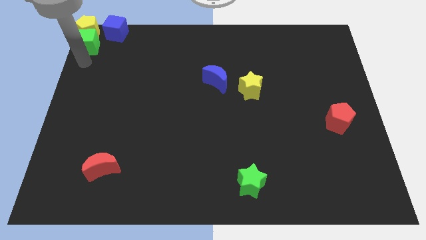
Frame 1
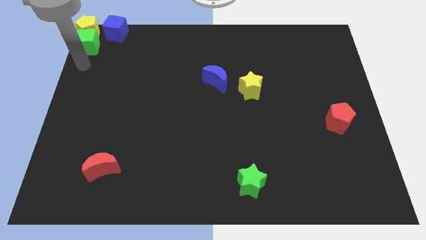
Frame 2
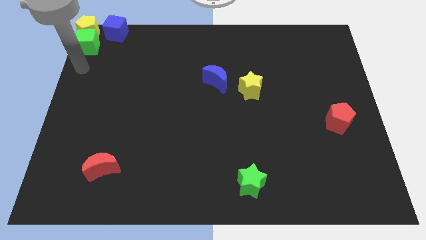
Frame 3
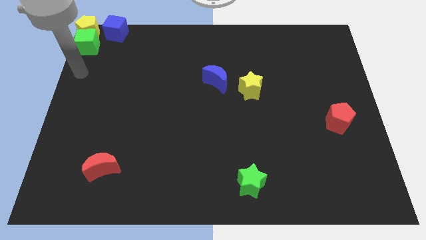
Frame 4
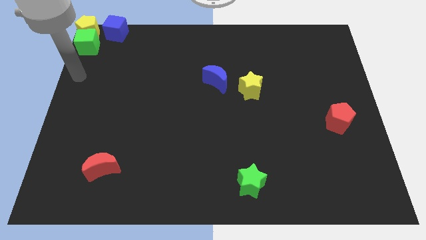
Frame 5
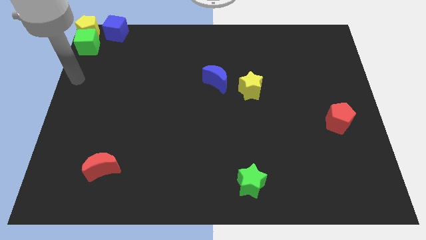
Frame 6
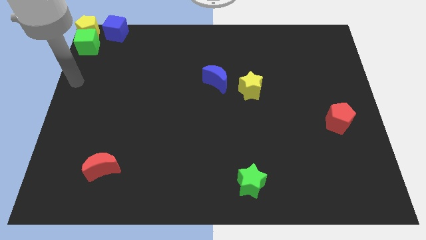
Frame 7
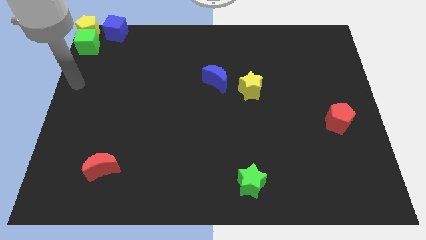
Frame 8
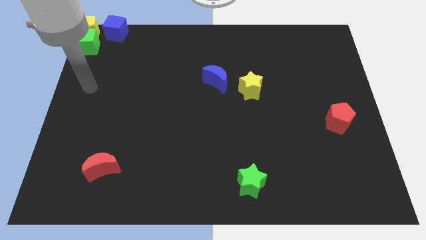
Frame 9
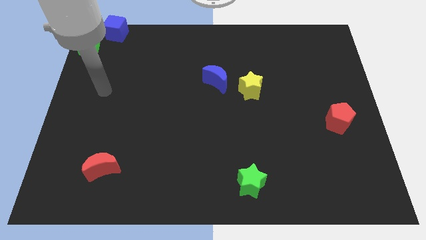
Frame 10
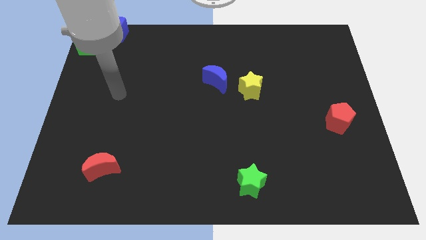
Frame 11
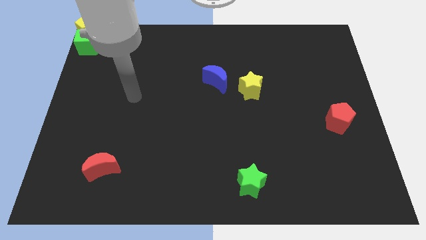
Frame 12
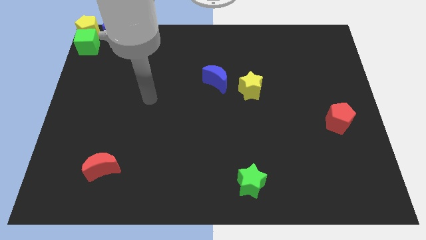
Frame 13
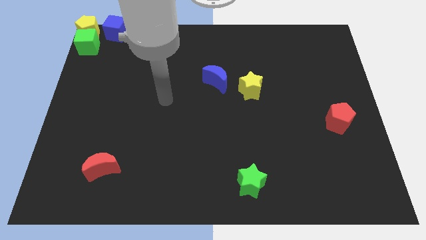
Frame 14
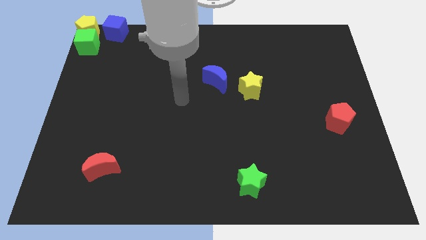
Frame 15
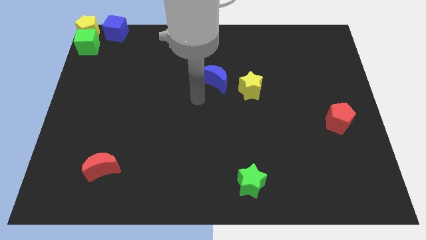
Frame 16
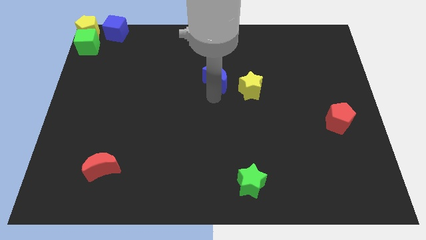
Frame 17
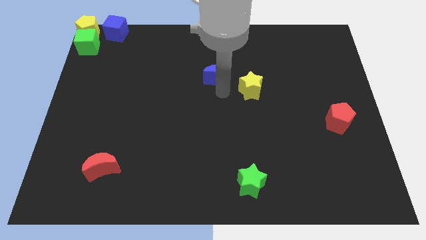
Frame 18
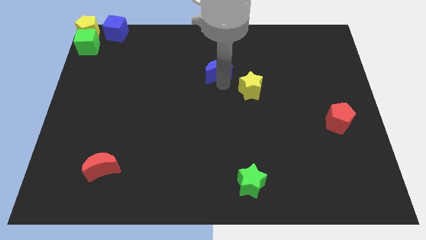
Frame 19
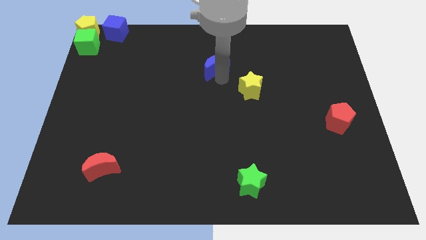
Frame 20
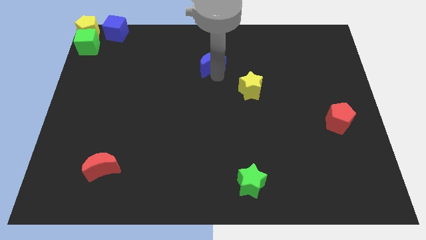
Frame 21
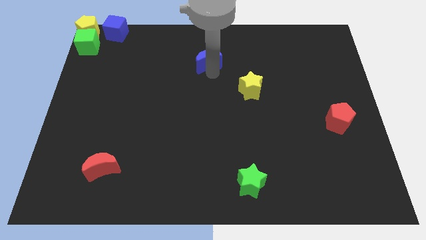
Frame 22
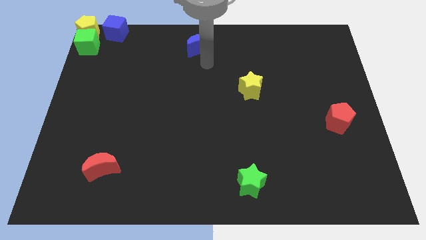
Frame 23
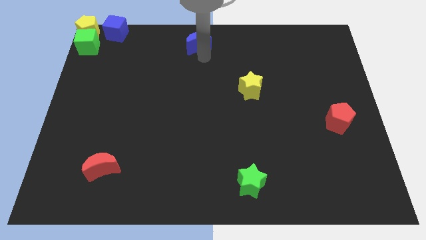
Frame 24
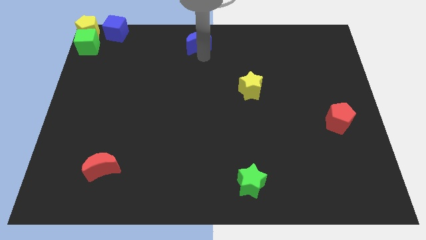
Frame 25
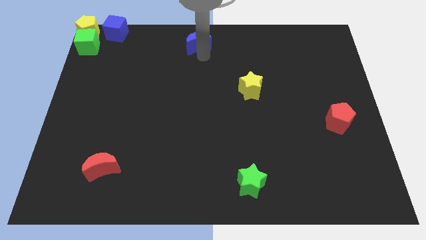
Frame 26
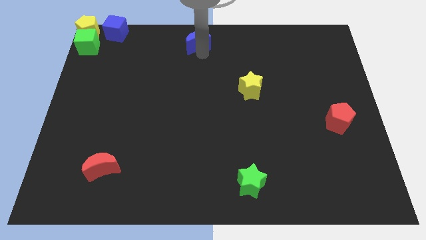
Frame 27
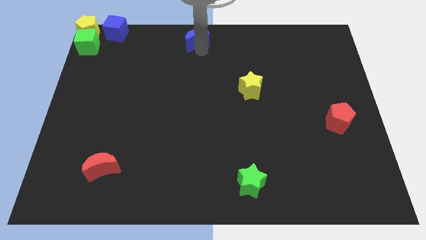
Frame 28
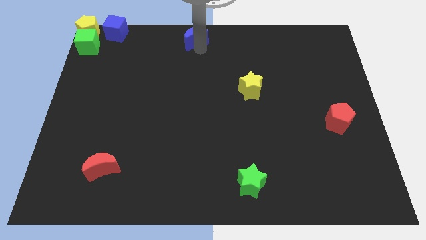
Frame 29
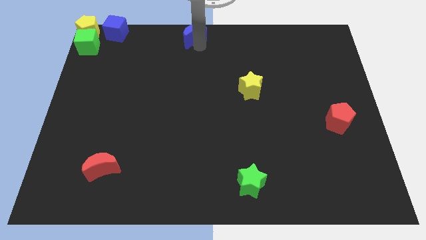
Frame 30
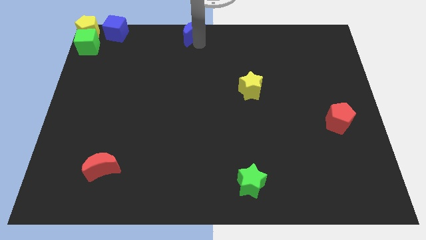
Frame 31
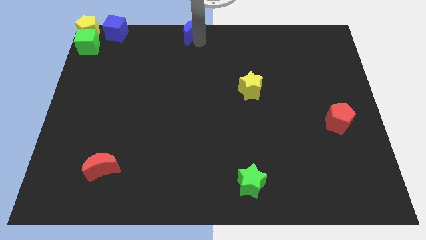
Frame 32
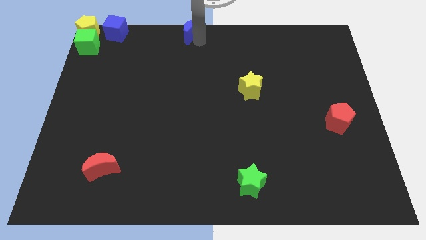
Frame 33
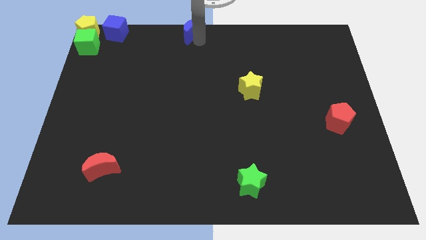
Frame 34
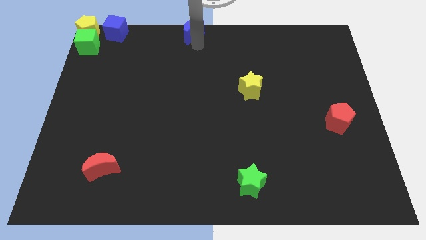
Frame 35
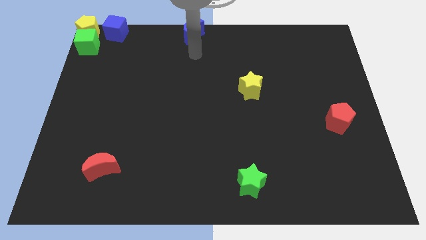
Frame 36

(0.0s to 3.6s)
drag the blue moon away from the yellow star

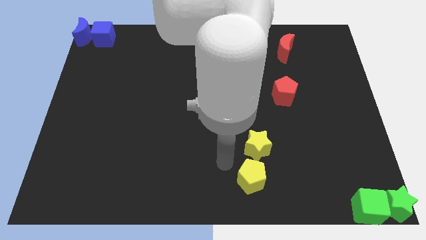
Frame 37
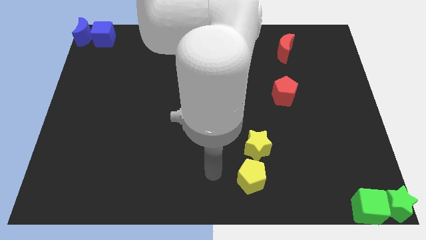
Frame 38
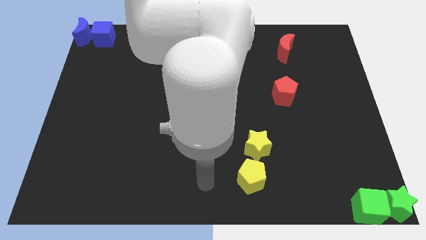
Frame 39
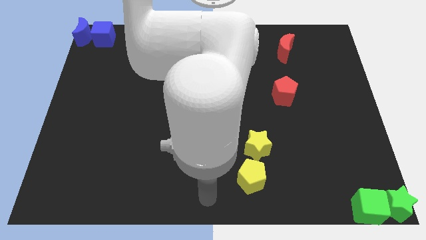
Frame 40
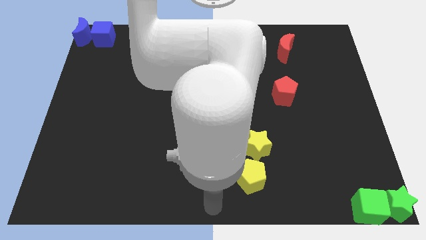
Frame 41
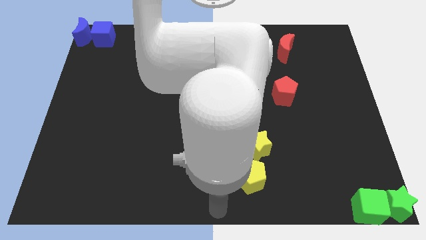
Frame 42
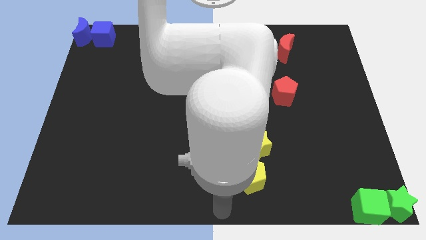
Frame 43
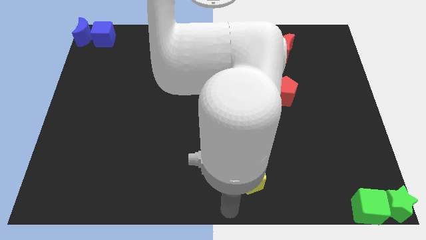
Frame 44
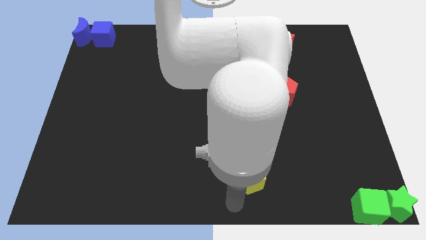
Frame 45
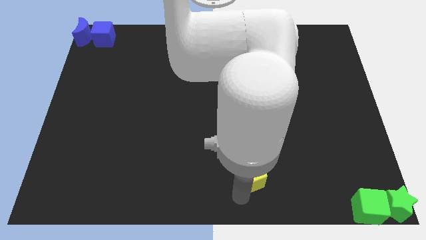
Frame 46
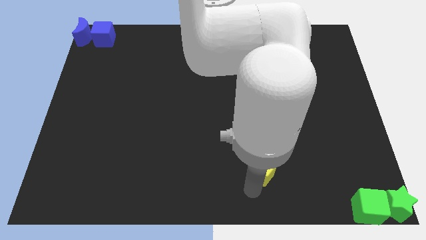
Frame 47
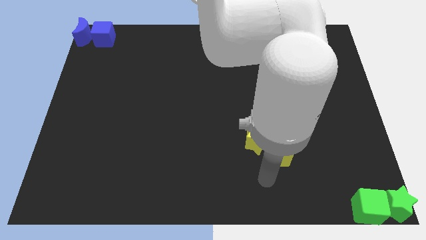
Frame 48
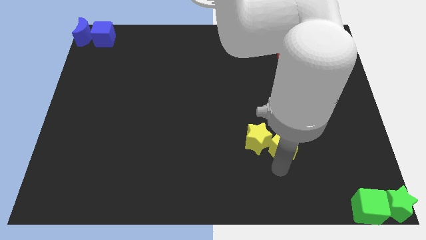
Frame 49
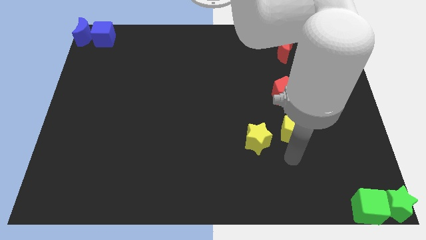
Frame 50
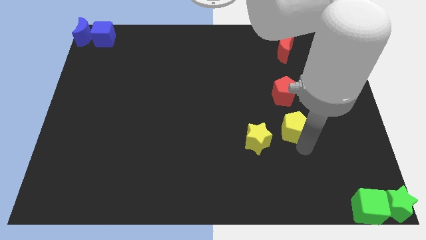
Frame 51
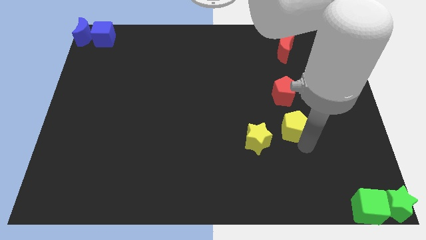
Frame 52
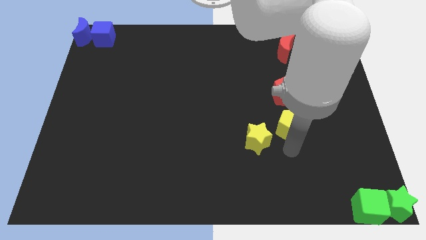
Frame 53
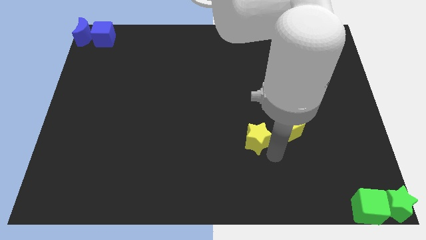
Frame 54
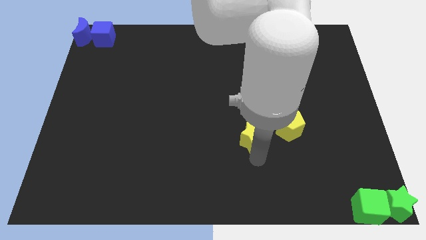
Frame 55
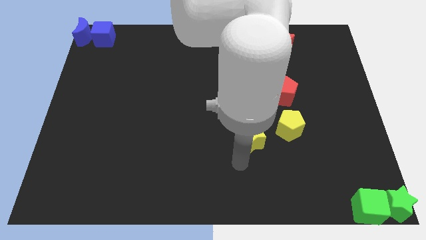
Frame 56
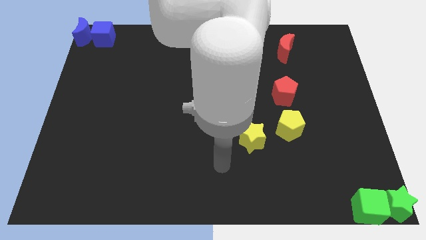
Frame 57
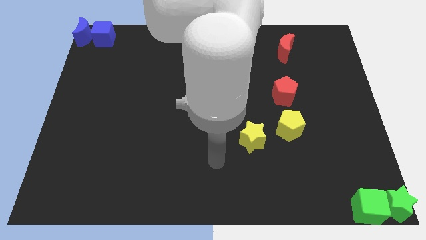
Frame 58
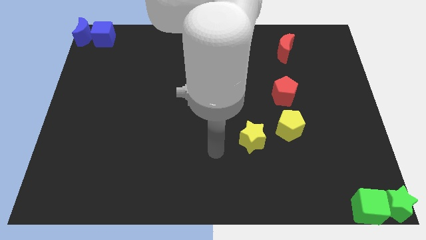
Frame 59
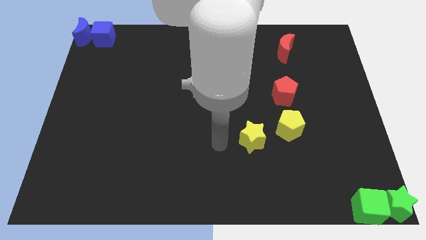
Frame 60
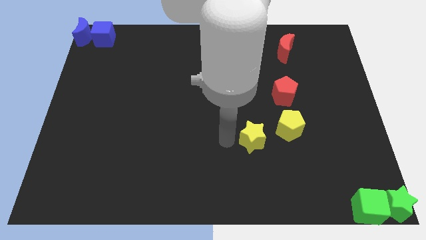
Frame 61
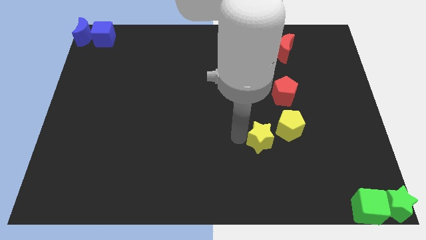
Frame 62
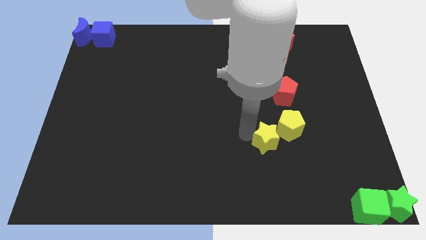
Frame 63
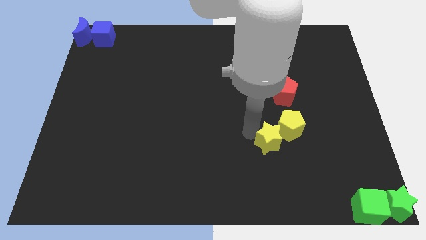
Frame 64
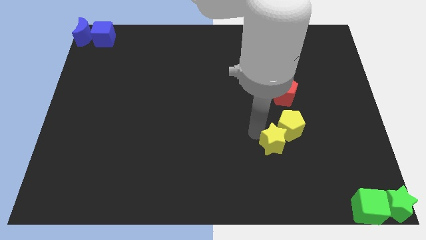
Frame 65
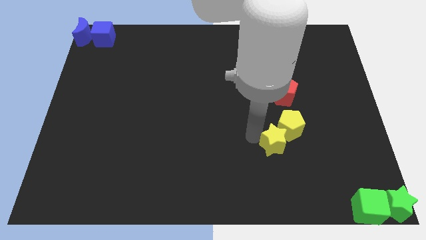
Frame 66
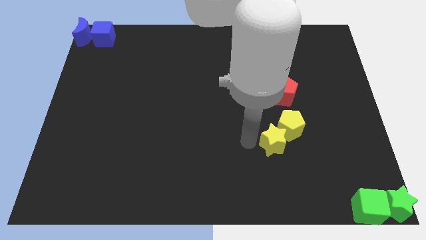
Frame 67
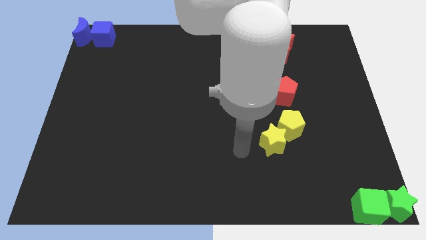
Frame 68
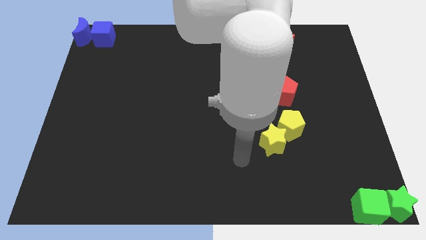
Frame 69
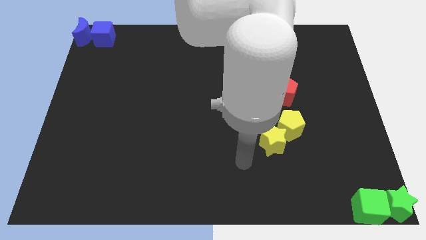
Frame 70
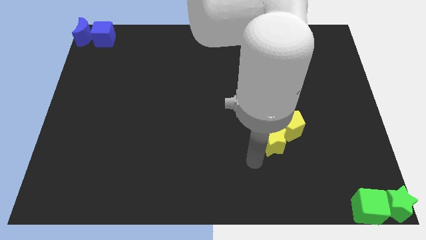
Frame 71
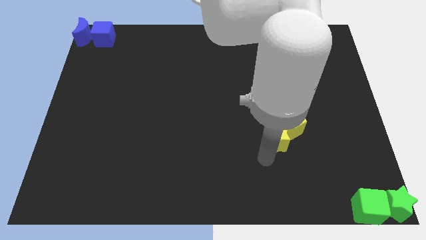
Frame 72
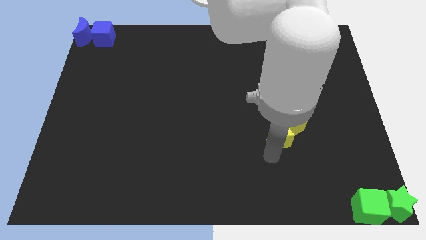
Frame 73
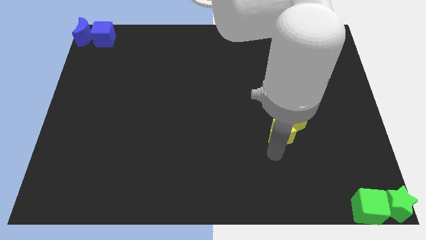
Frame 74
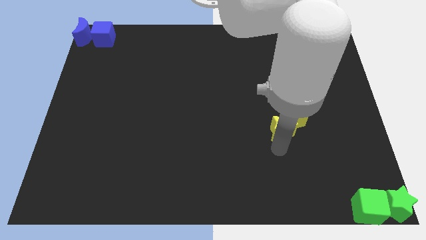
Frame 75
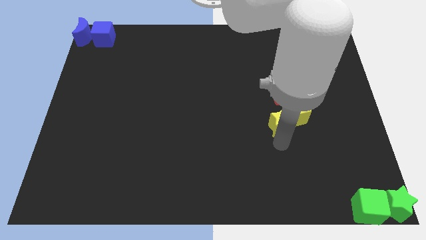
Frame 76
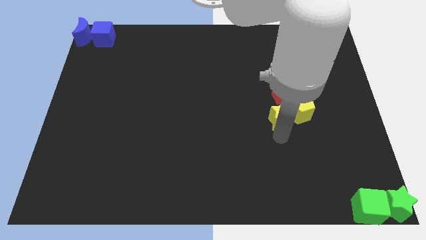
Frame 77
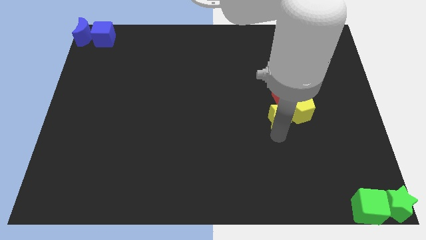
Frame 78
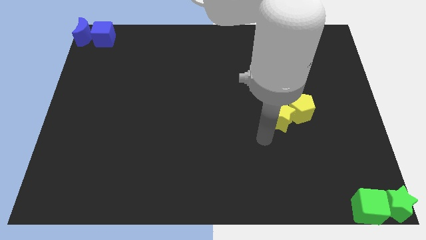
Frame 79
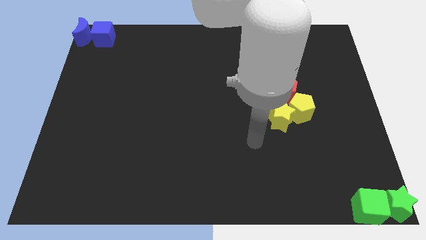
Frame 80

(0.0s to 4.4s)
push the yellow pentagon and the yellow star to the bottom of the red pentagon

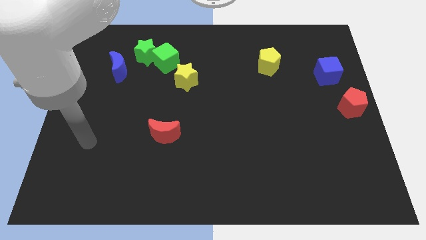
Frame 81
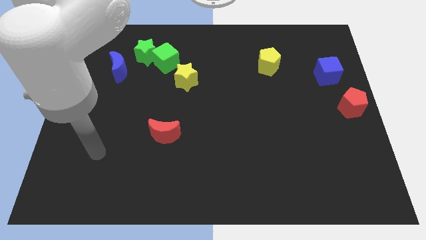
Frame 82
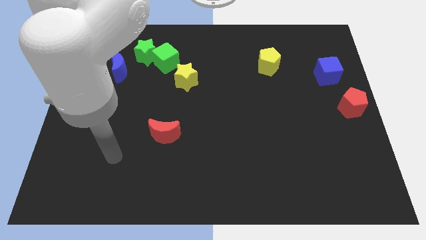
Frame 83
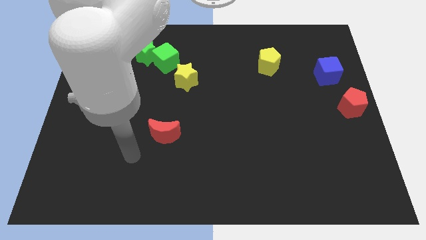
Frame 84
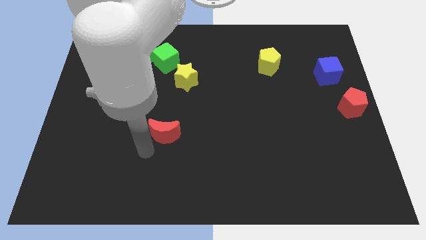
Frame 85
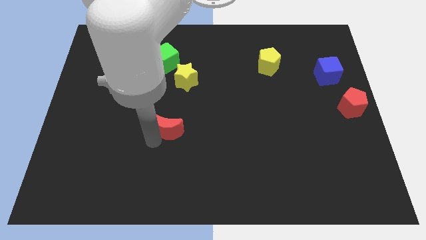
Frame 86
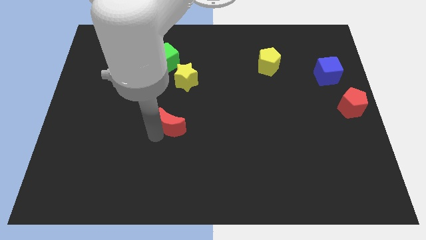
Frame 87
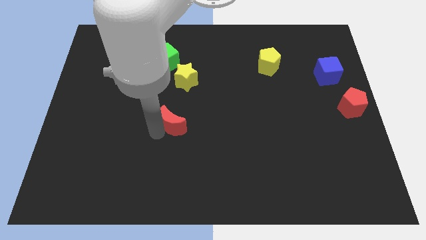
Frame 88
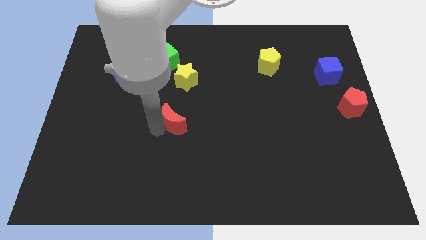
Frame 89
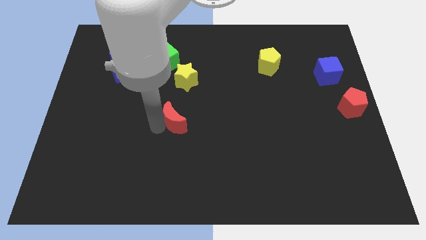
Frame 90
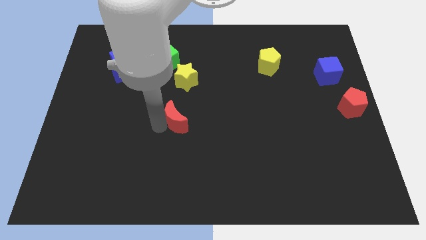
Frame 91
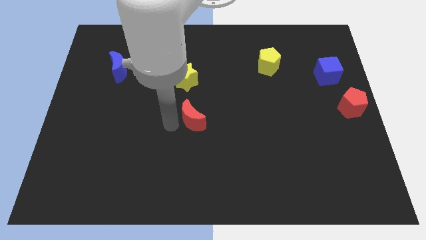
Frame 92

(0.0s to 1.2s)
place the red moon below the yellow star
